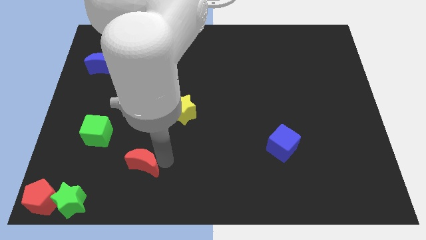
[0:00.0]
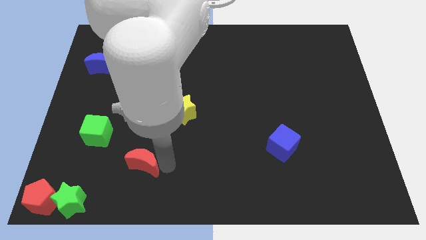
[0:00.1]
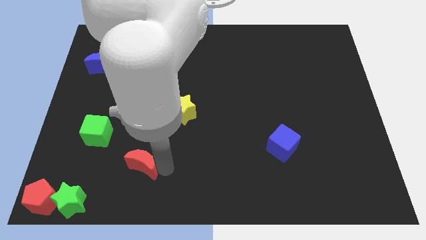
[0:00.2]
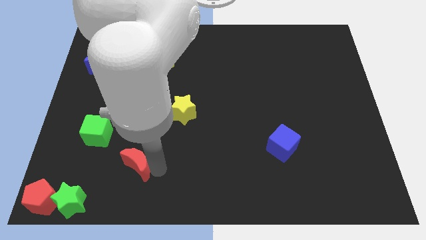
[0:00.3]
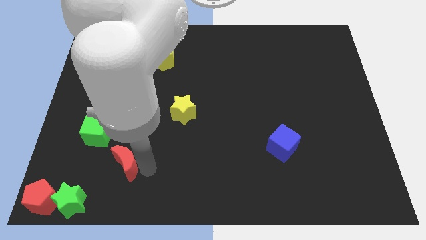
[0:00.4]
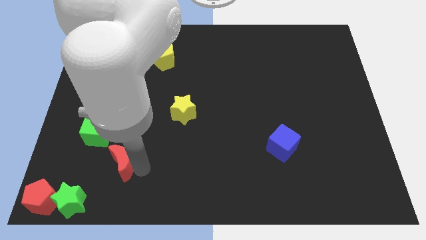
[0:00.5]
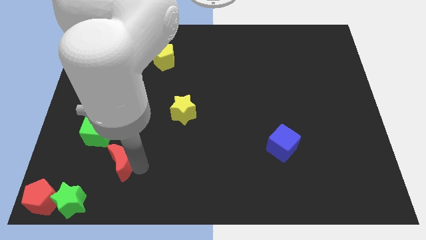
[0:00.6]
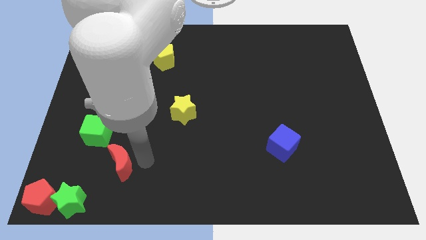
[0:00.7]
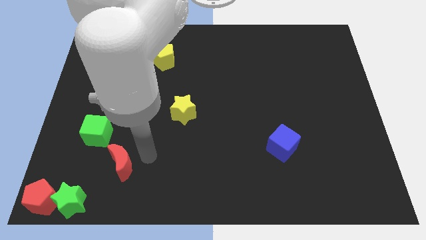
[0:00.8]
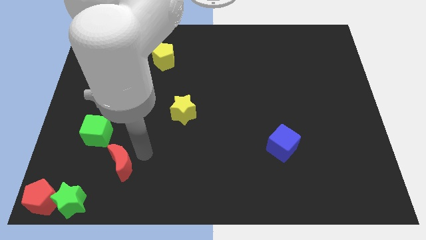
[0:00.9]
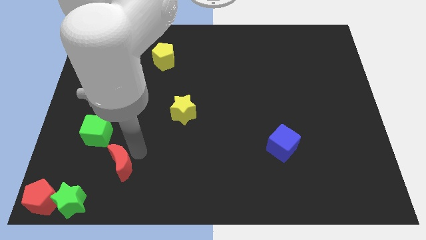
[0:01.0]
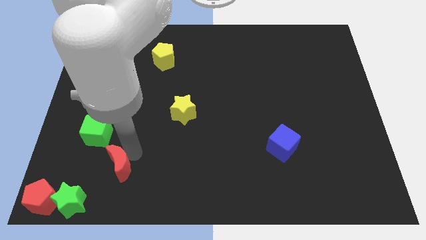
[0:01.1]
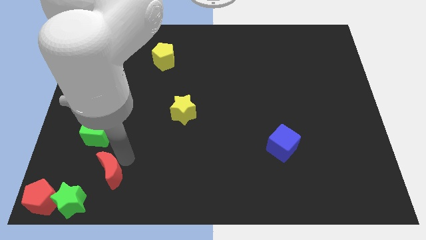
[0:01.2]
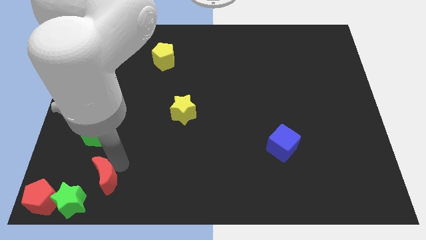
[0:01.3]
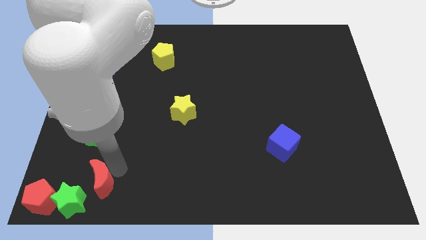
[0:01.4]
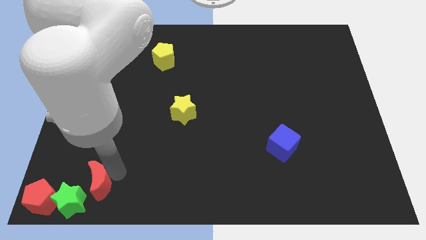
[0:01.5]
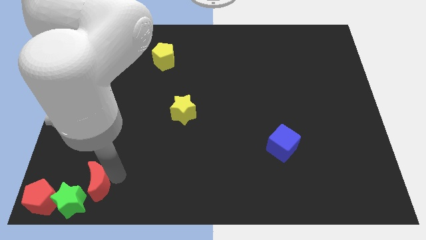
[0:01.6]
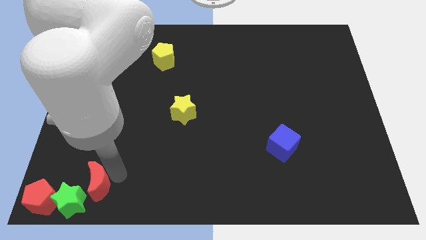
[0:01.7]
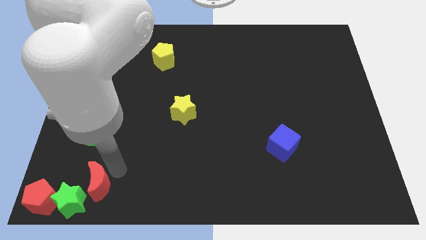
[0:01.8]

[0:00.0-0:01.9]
place the red crescent to the top right of the green star

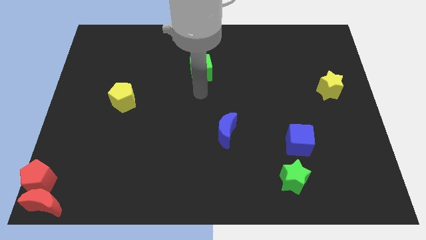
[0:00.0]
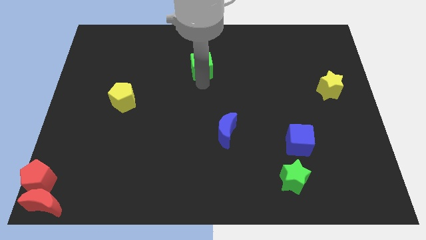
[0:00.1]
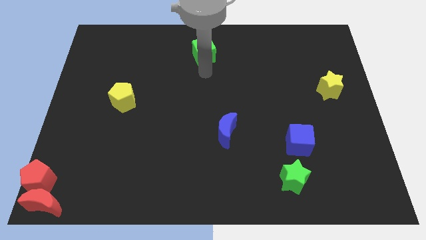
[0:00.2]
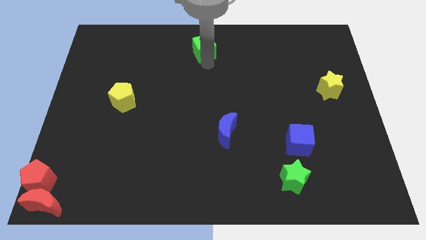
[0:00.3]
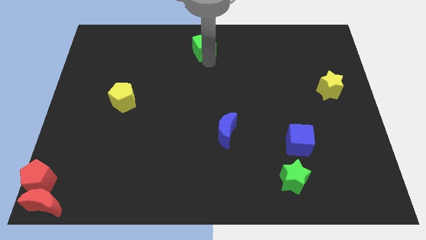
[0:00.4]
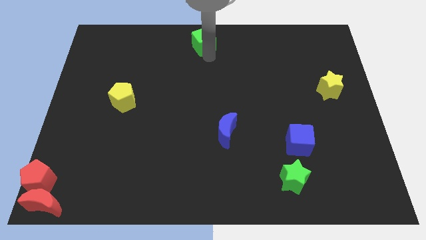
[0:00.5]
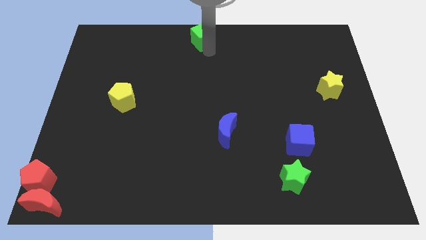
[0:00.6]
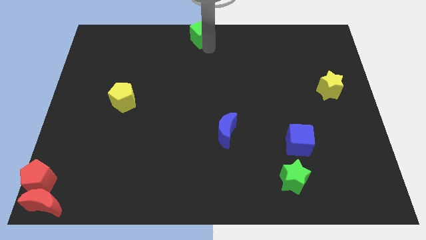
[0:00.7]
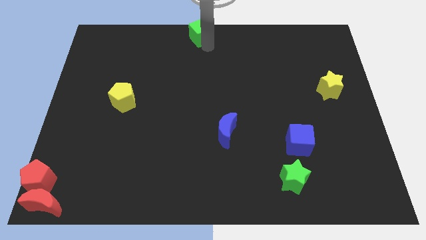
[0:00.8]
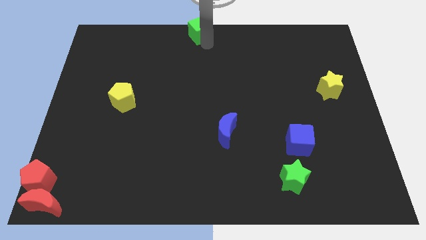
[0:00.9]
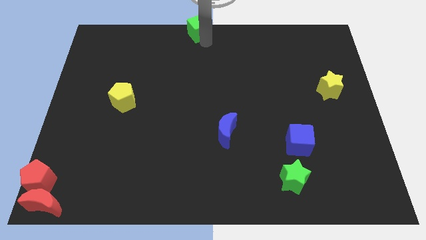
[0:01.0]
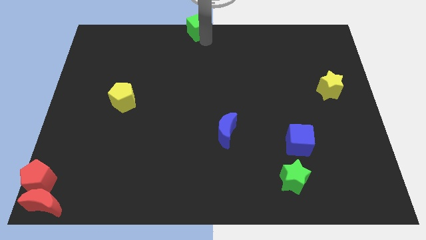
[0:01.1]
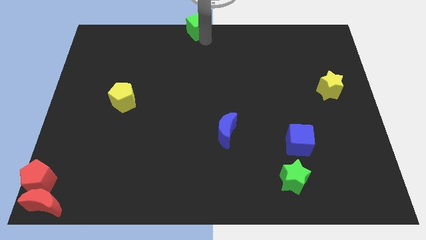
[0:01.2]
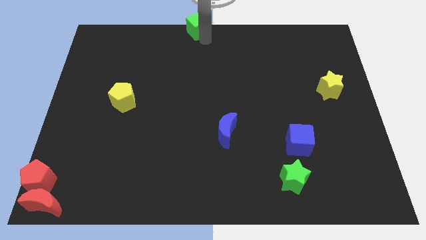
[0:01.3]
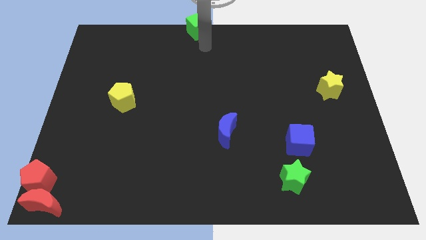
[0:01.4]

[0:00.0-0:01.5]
place the green cube at the top center of the board

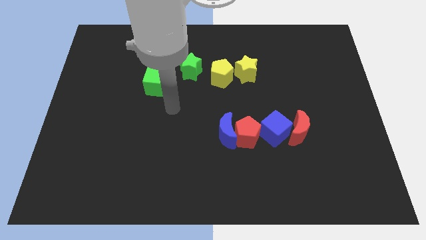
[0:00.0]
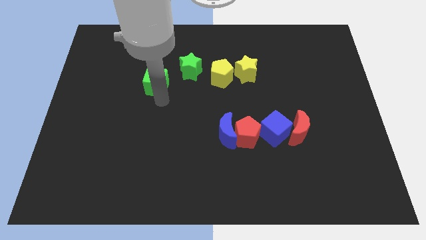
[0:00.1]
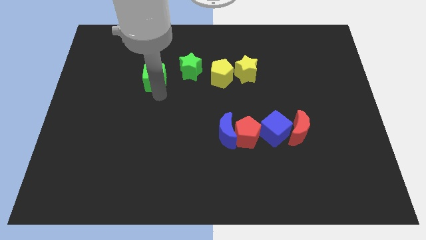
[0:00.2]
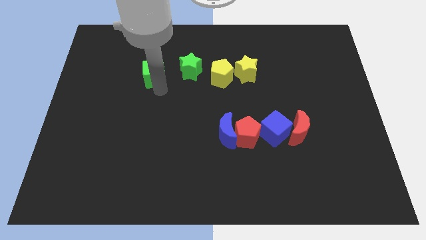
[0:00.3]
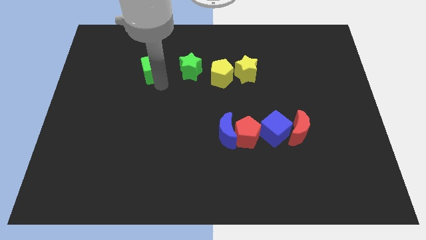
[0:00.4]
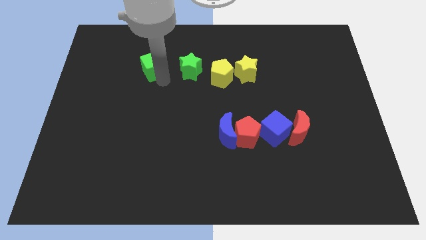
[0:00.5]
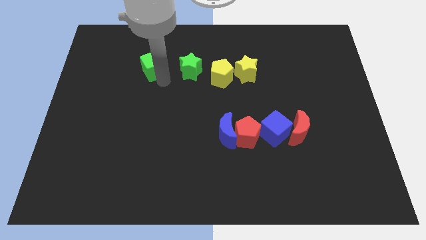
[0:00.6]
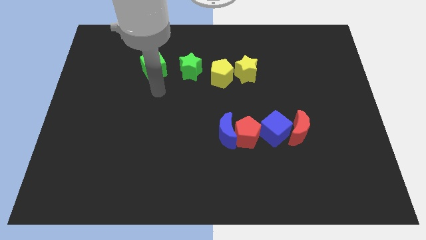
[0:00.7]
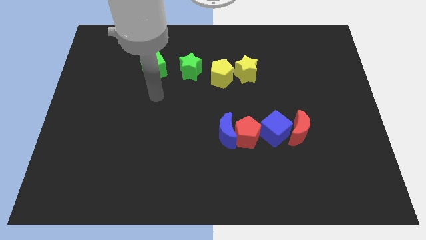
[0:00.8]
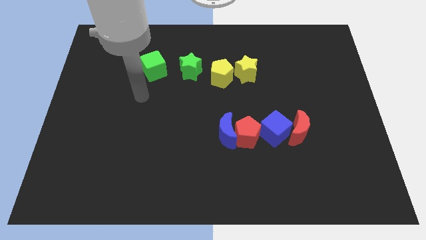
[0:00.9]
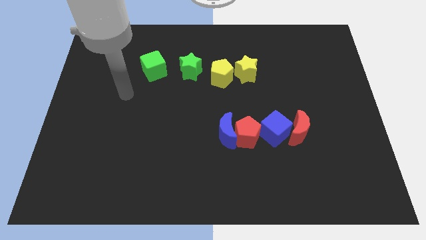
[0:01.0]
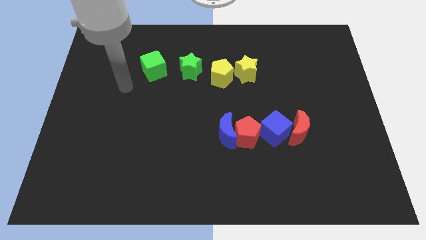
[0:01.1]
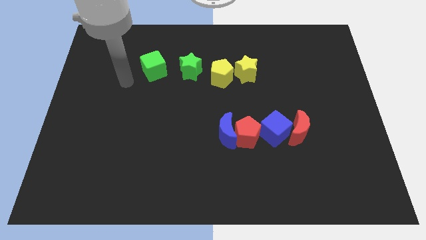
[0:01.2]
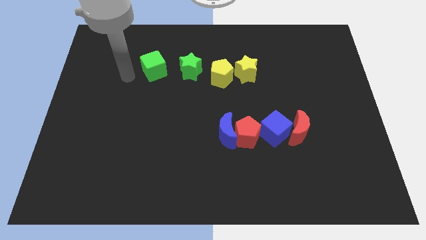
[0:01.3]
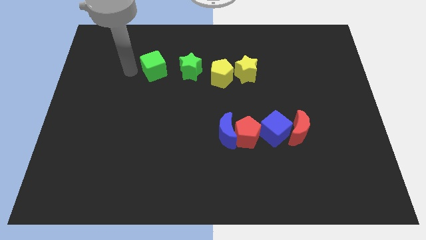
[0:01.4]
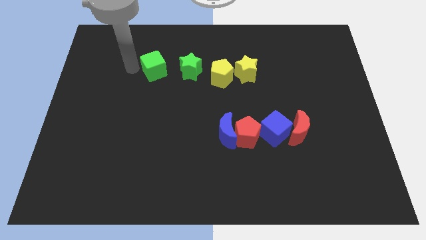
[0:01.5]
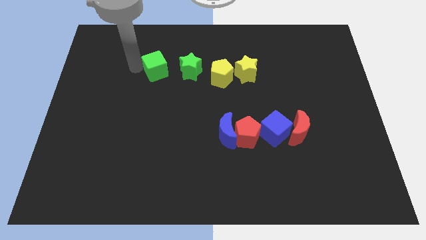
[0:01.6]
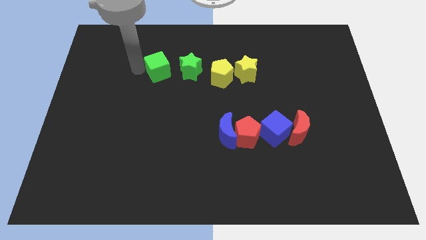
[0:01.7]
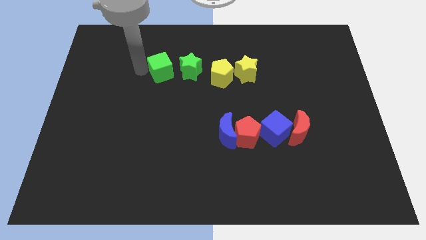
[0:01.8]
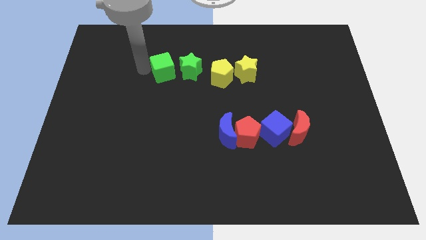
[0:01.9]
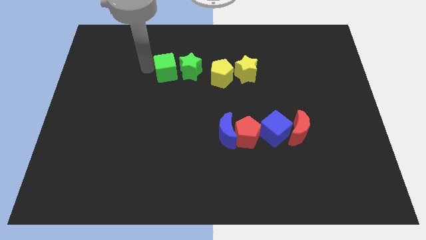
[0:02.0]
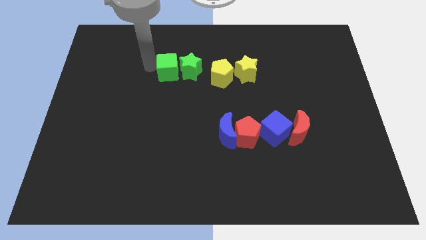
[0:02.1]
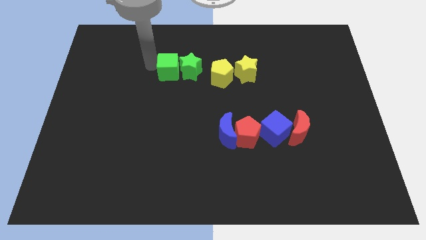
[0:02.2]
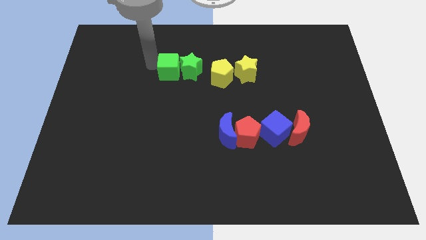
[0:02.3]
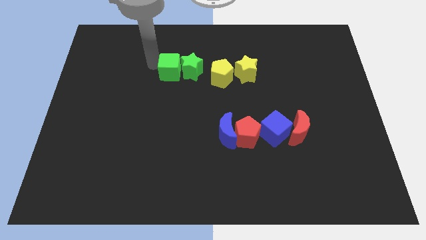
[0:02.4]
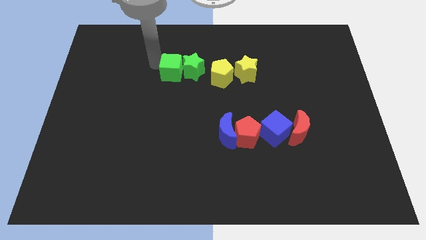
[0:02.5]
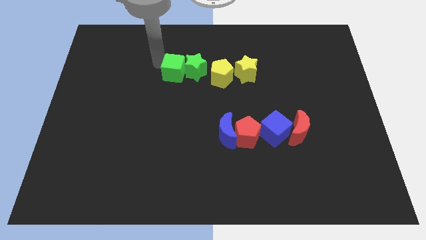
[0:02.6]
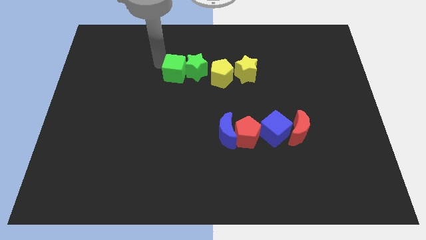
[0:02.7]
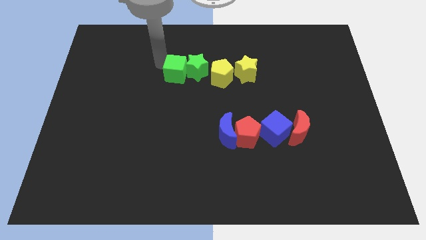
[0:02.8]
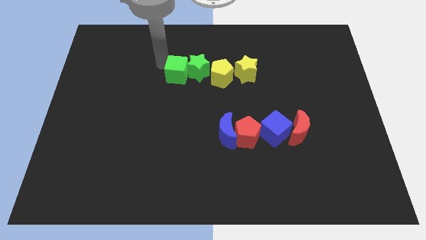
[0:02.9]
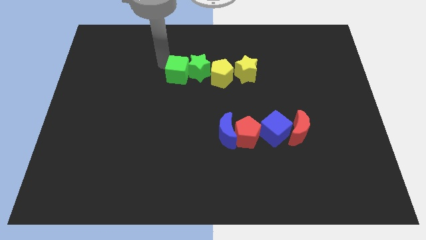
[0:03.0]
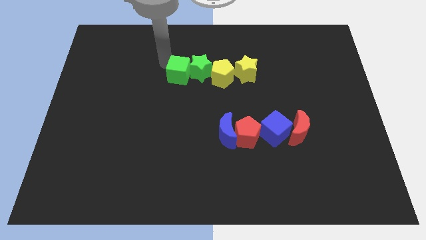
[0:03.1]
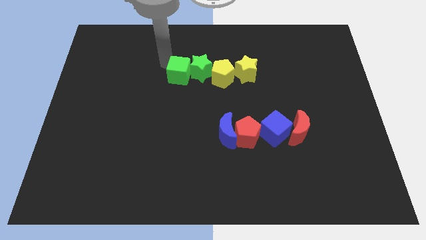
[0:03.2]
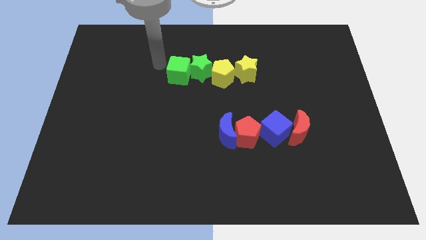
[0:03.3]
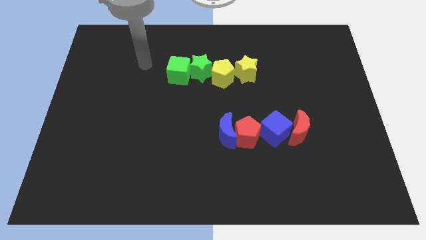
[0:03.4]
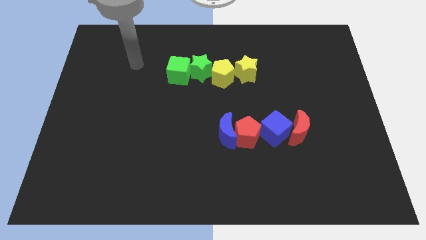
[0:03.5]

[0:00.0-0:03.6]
push the green cube into the green star

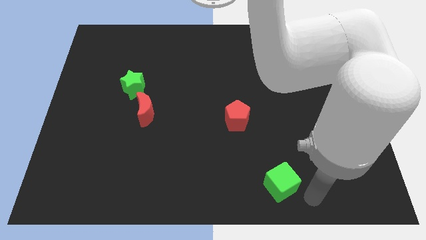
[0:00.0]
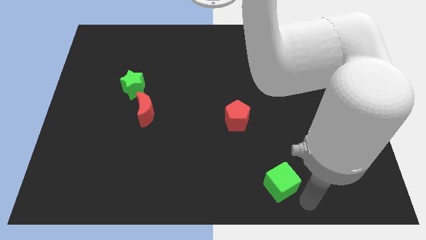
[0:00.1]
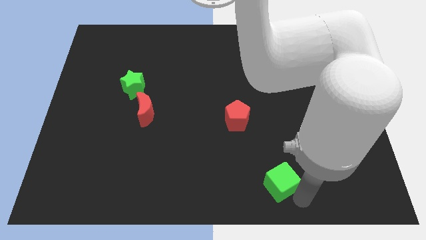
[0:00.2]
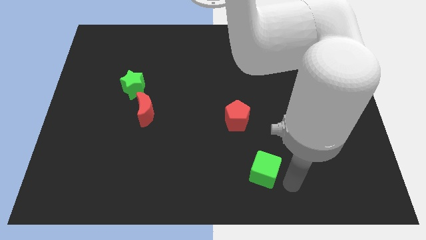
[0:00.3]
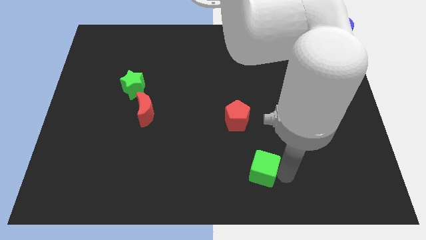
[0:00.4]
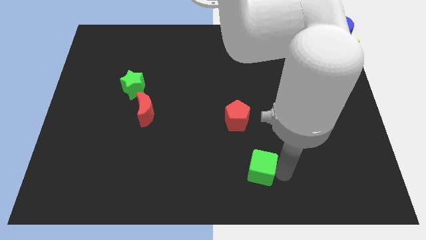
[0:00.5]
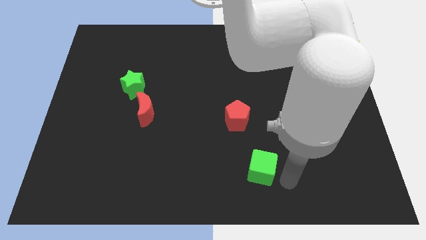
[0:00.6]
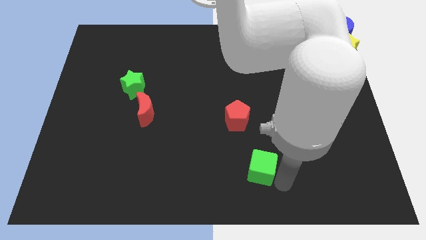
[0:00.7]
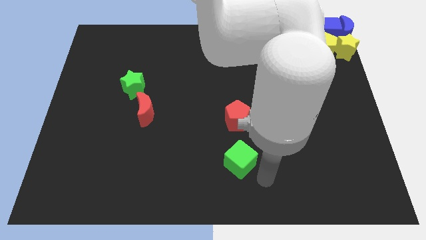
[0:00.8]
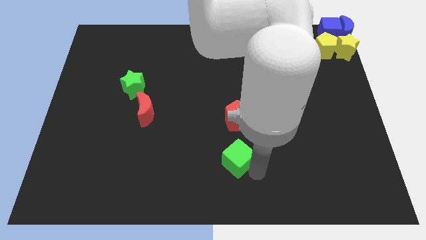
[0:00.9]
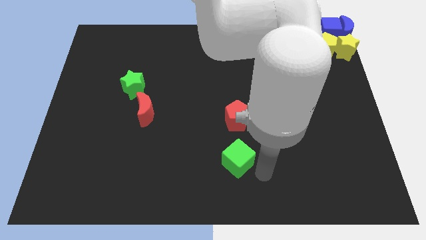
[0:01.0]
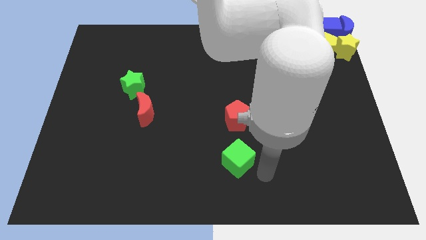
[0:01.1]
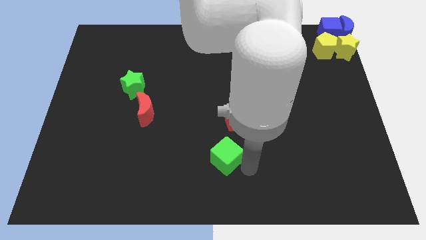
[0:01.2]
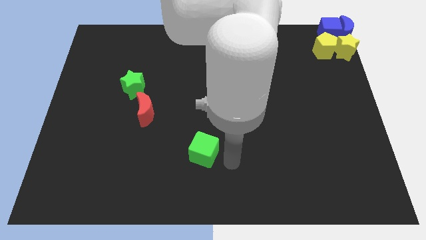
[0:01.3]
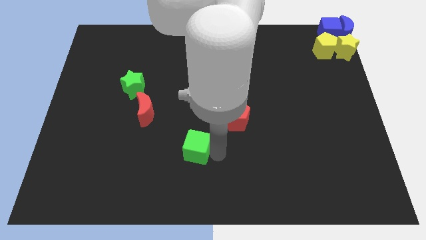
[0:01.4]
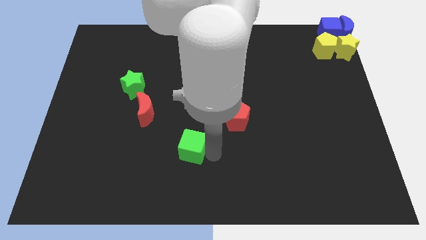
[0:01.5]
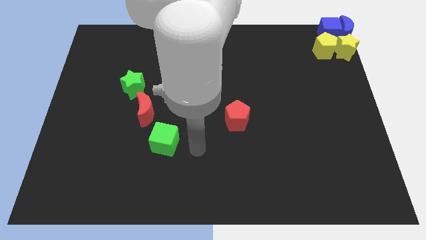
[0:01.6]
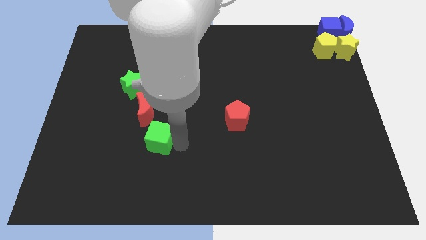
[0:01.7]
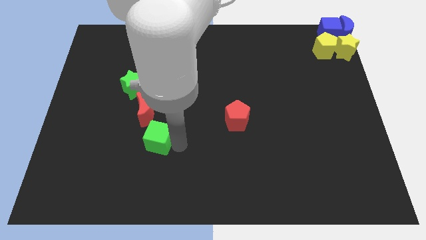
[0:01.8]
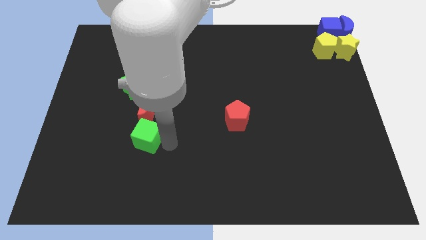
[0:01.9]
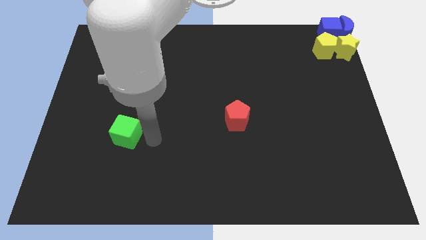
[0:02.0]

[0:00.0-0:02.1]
place green cube to the bottom left of red moon
